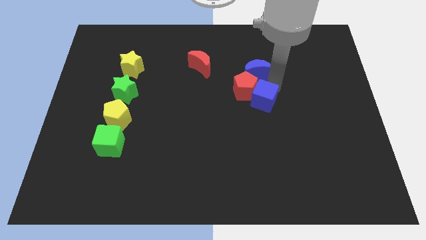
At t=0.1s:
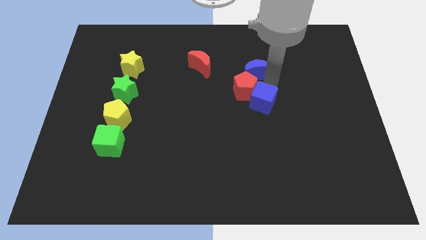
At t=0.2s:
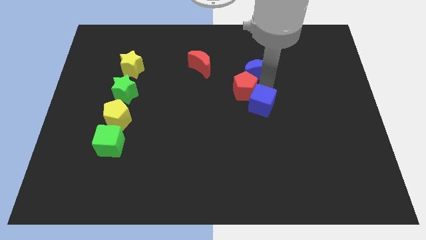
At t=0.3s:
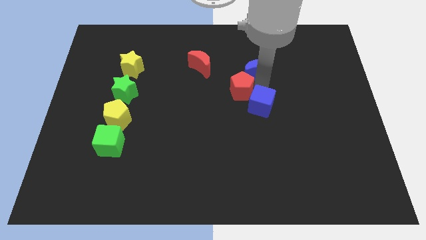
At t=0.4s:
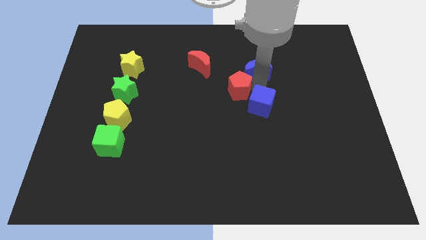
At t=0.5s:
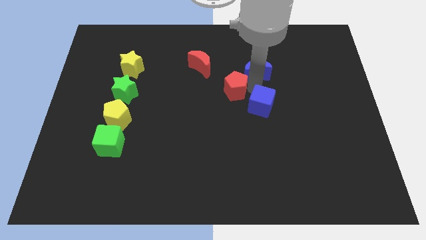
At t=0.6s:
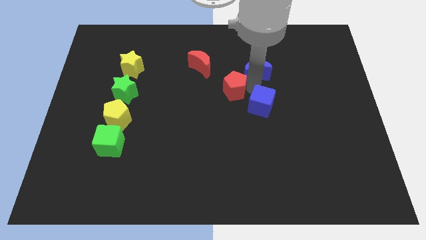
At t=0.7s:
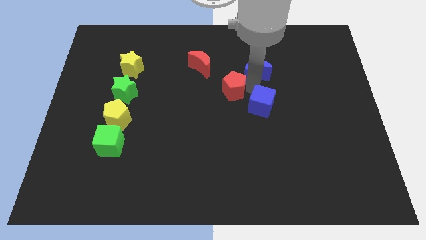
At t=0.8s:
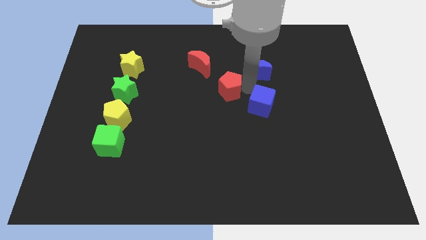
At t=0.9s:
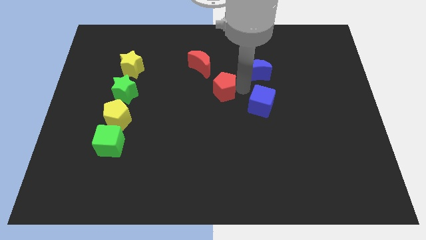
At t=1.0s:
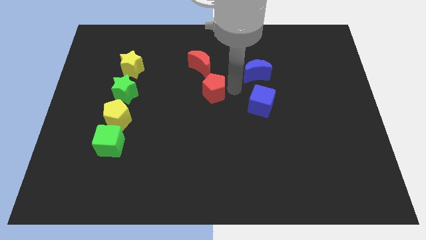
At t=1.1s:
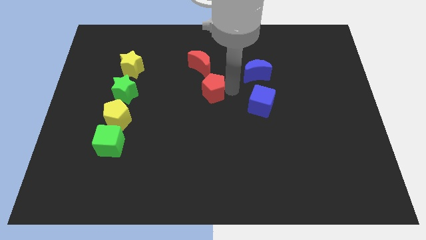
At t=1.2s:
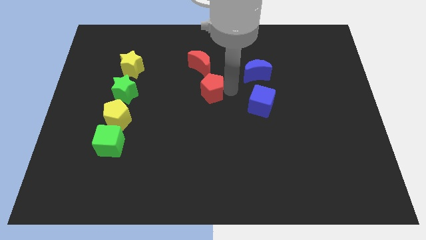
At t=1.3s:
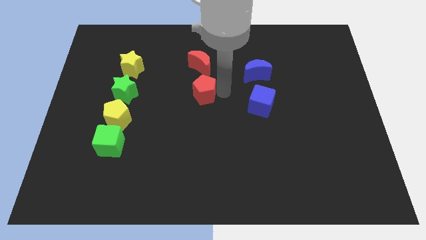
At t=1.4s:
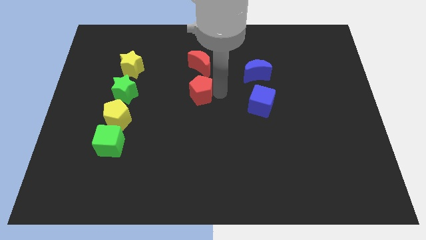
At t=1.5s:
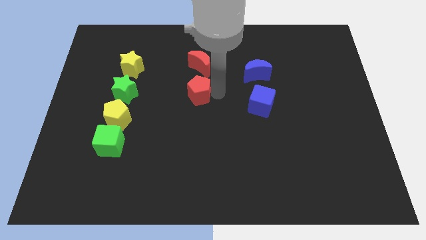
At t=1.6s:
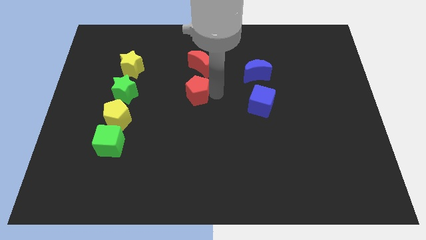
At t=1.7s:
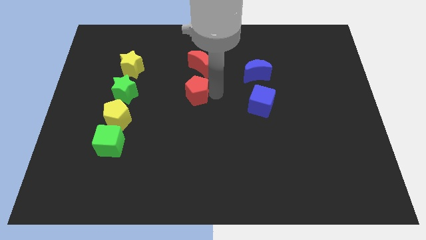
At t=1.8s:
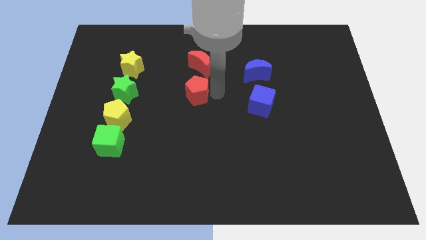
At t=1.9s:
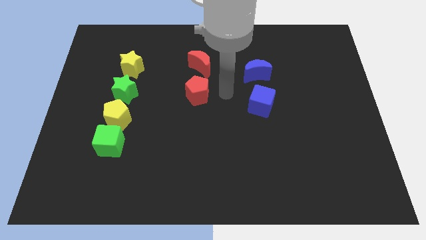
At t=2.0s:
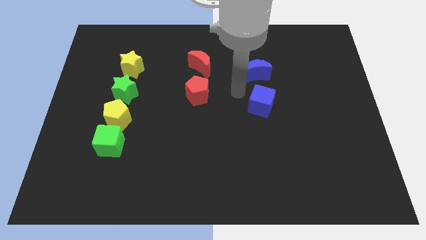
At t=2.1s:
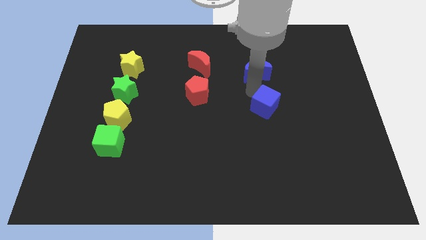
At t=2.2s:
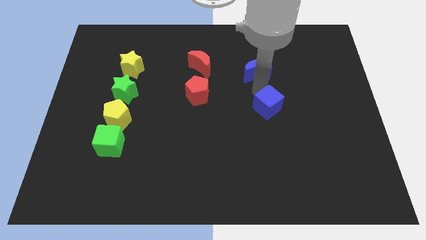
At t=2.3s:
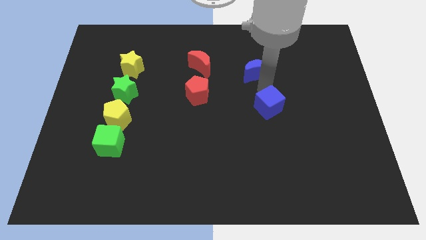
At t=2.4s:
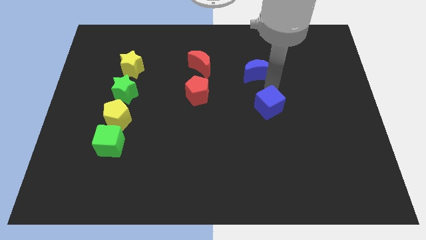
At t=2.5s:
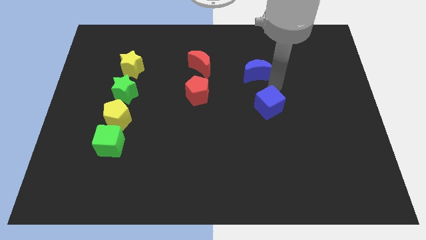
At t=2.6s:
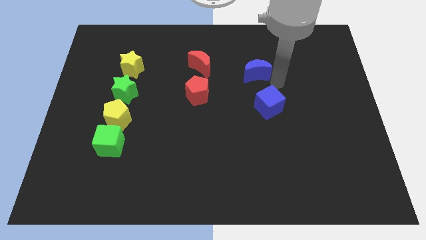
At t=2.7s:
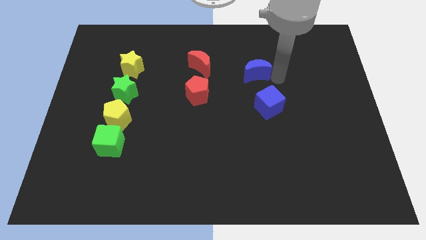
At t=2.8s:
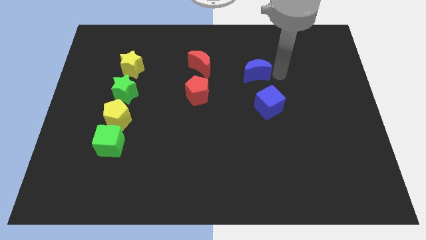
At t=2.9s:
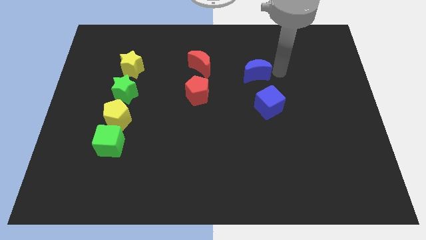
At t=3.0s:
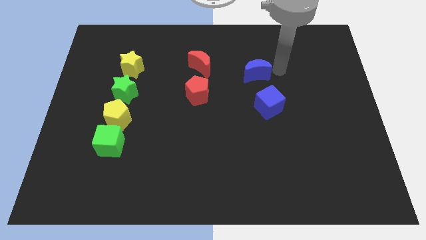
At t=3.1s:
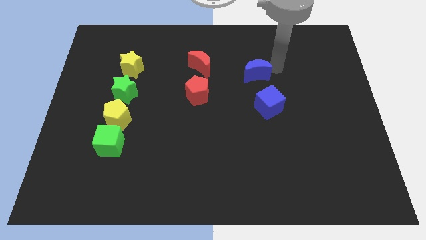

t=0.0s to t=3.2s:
separate red pentagon and the blue cube

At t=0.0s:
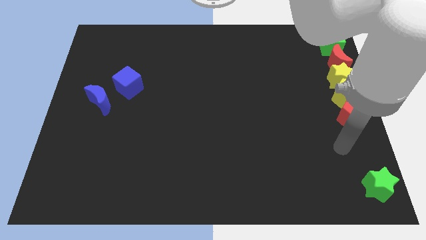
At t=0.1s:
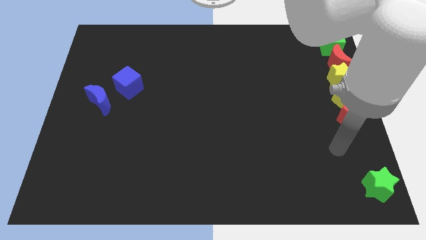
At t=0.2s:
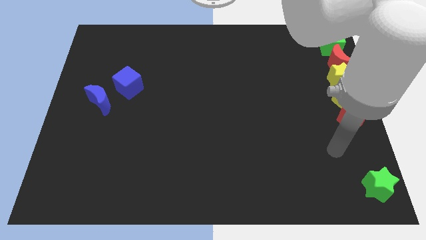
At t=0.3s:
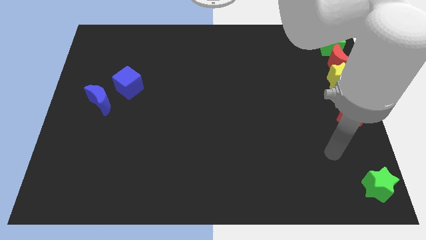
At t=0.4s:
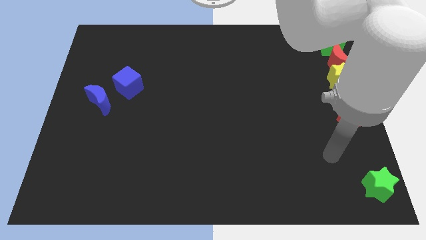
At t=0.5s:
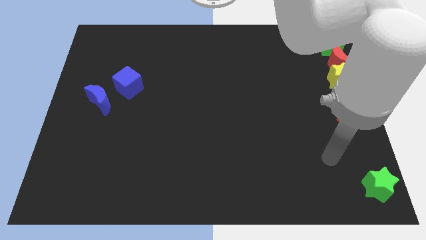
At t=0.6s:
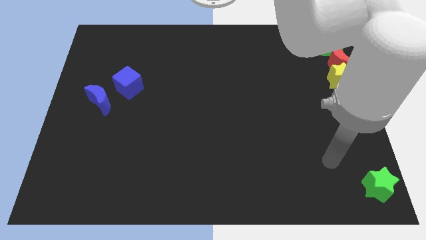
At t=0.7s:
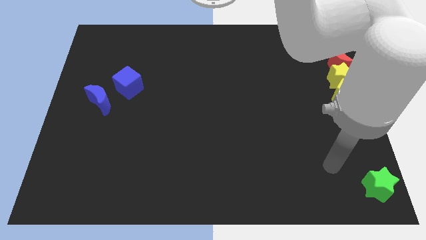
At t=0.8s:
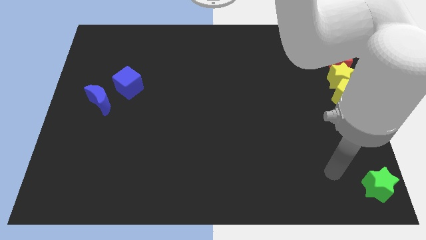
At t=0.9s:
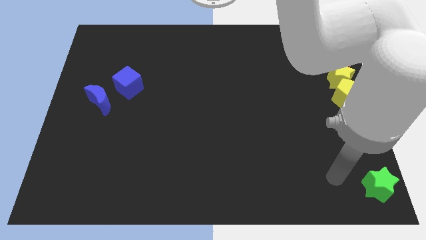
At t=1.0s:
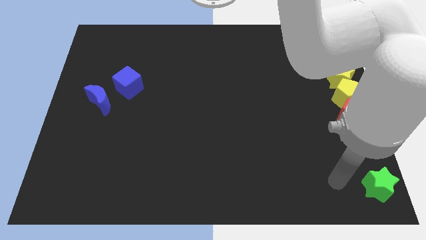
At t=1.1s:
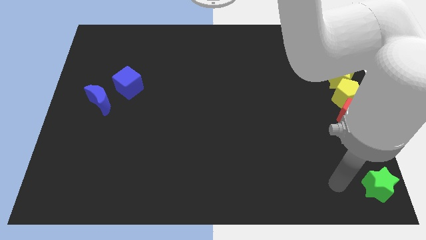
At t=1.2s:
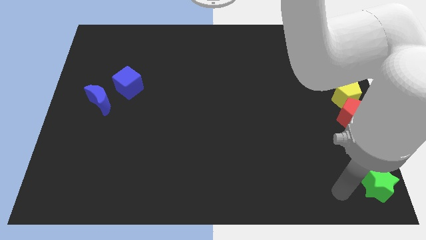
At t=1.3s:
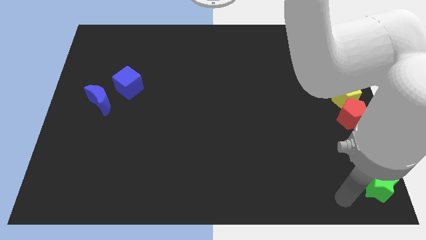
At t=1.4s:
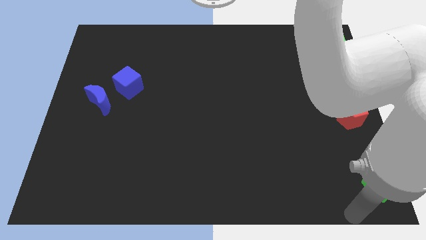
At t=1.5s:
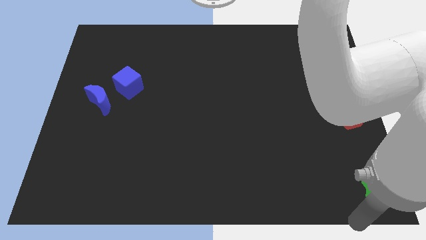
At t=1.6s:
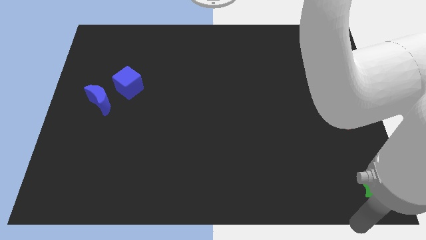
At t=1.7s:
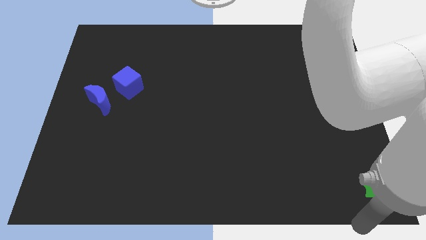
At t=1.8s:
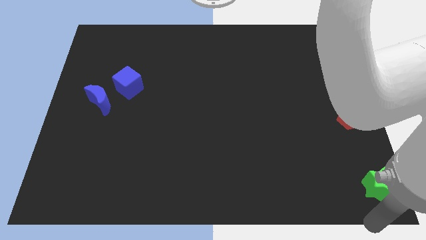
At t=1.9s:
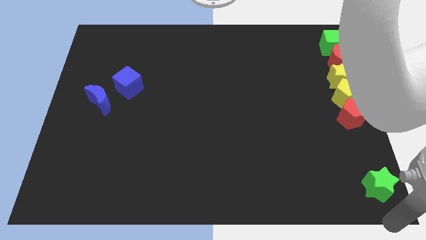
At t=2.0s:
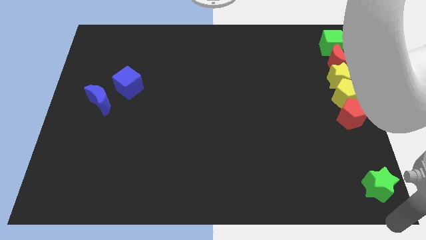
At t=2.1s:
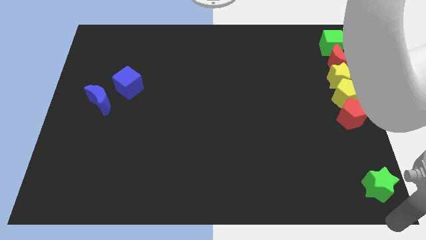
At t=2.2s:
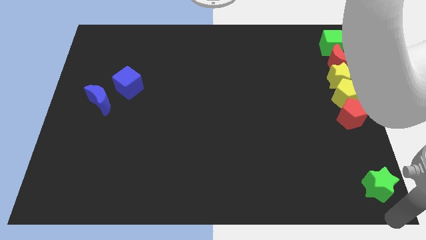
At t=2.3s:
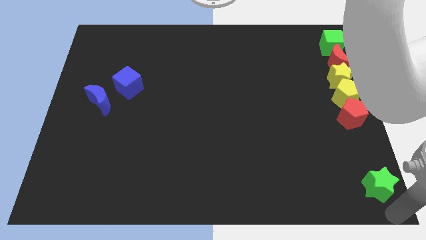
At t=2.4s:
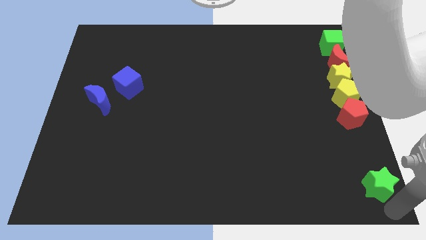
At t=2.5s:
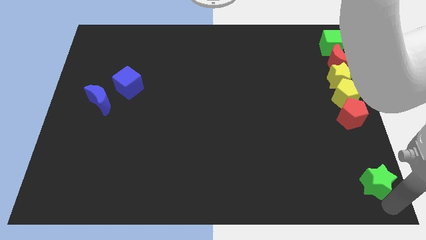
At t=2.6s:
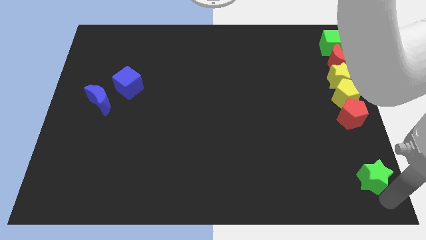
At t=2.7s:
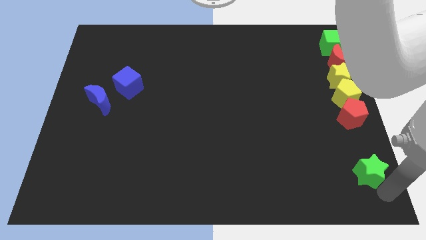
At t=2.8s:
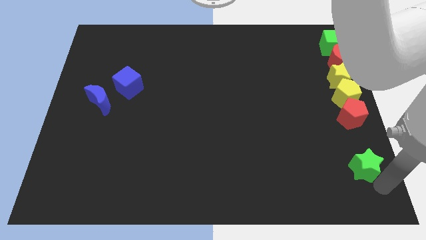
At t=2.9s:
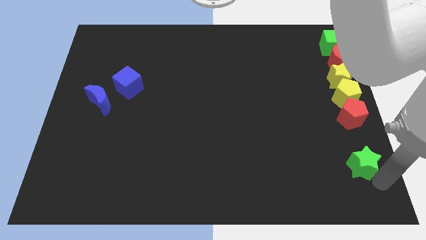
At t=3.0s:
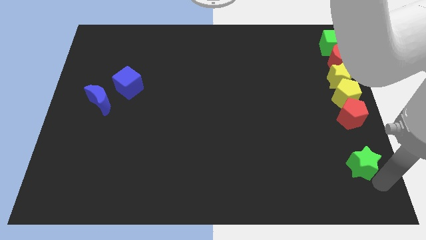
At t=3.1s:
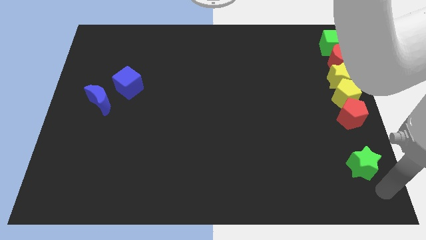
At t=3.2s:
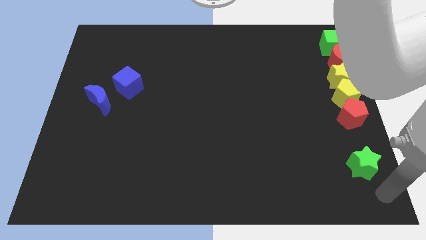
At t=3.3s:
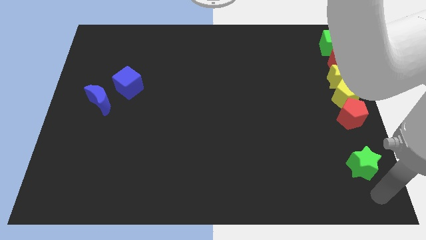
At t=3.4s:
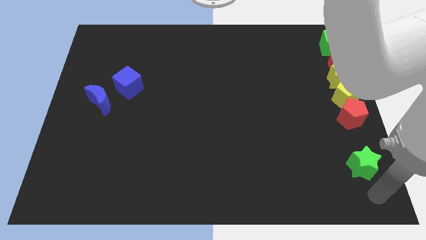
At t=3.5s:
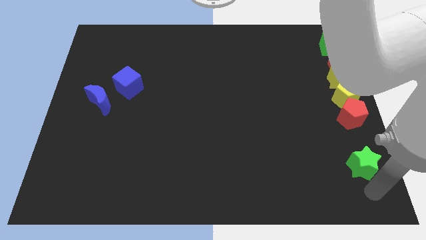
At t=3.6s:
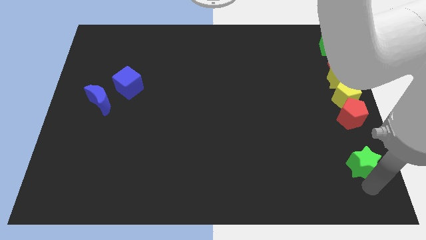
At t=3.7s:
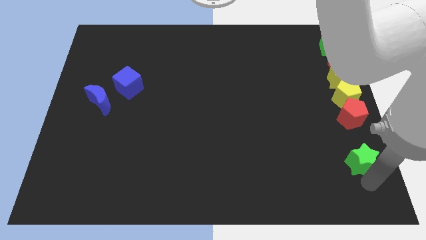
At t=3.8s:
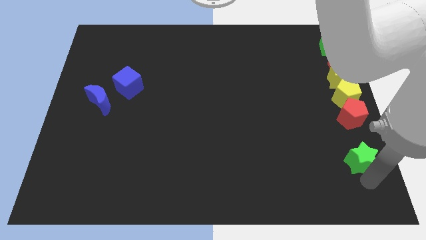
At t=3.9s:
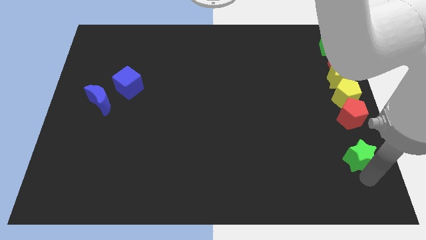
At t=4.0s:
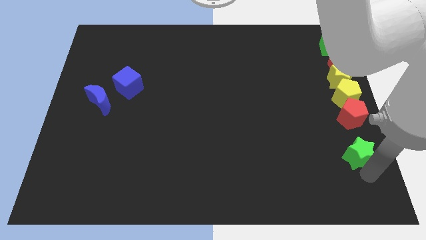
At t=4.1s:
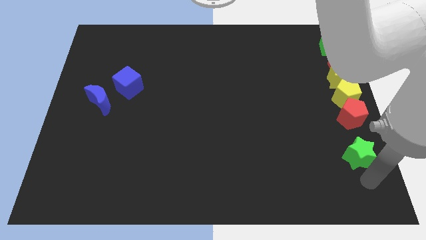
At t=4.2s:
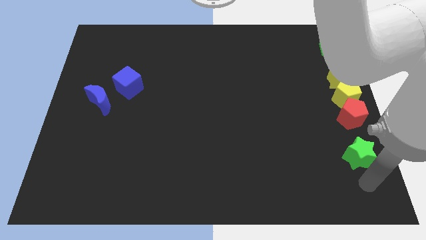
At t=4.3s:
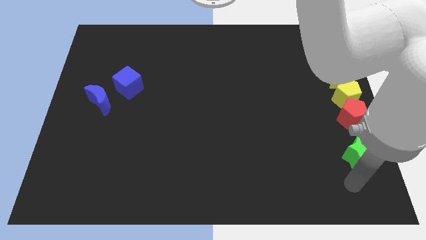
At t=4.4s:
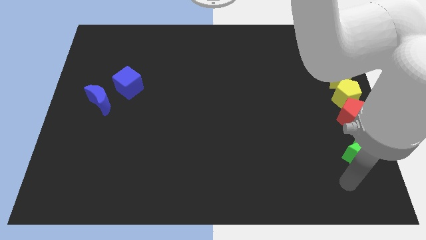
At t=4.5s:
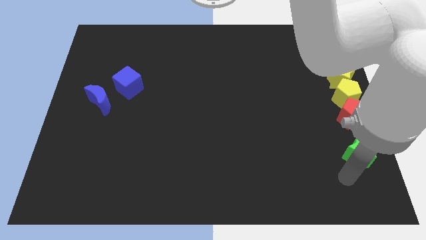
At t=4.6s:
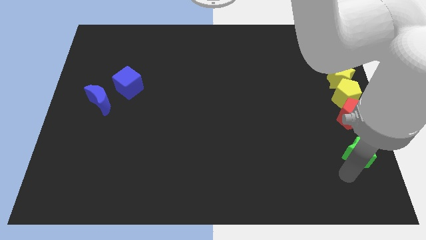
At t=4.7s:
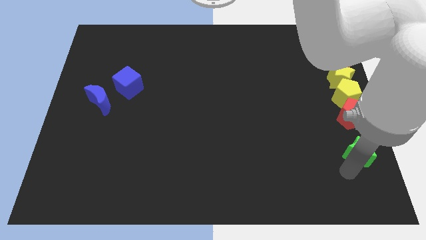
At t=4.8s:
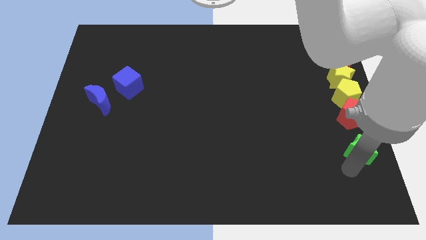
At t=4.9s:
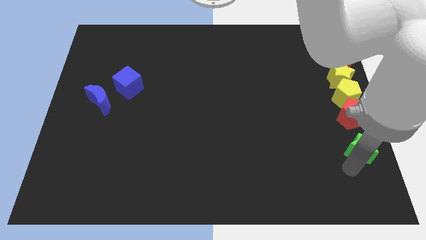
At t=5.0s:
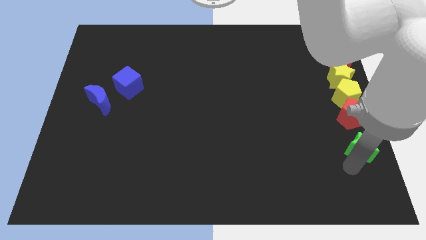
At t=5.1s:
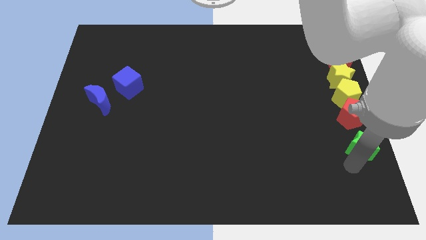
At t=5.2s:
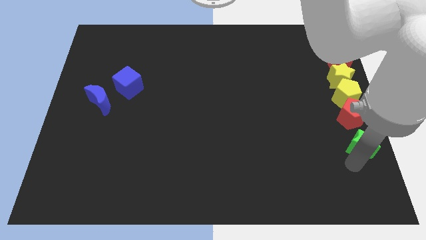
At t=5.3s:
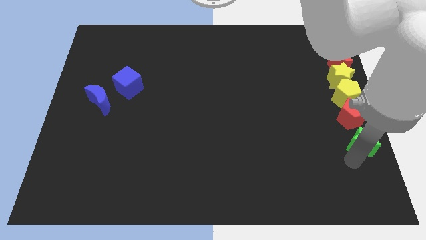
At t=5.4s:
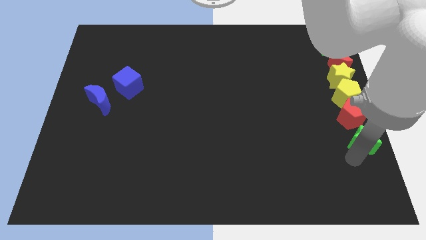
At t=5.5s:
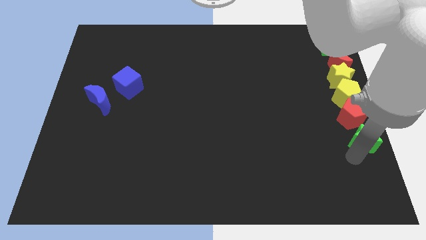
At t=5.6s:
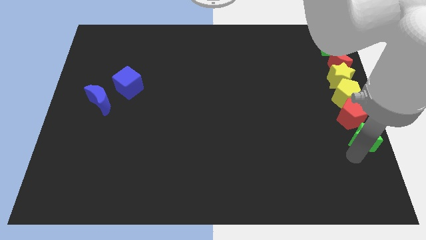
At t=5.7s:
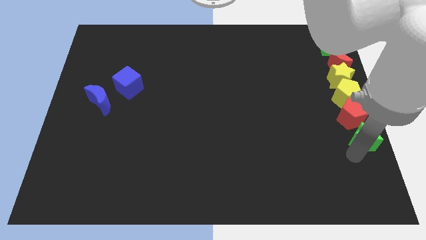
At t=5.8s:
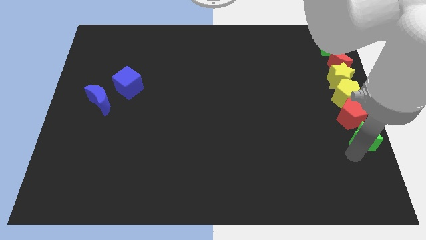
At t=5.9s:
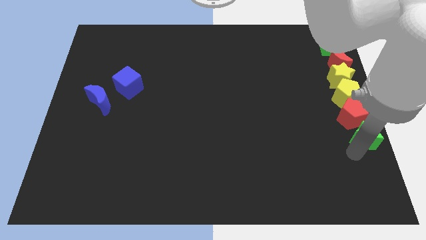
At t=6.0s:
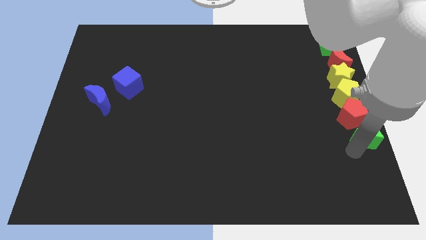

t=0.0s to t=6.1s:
move the green star below the red pentagon
